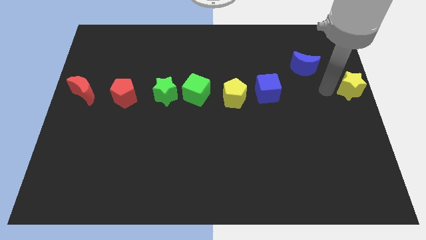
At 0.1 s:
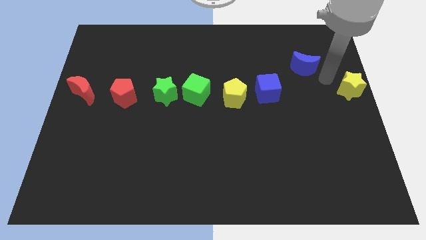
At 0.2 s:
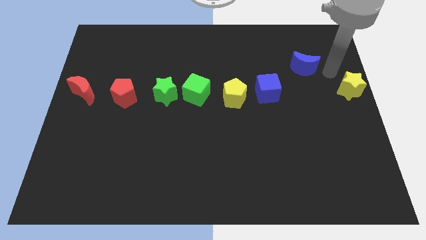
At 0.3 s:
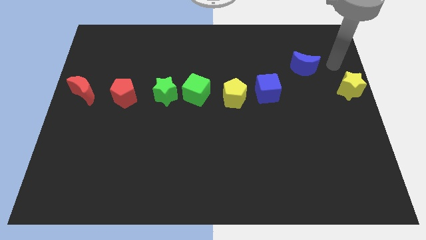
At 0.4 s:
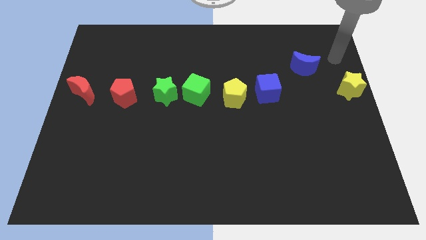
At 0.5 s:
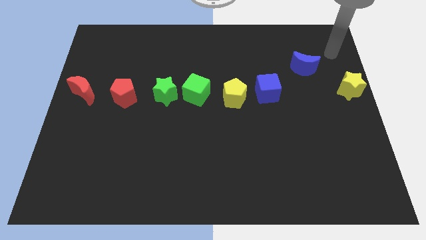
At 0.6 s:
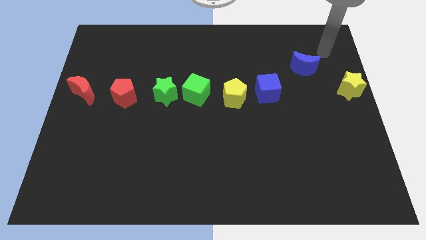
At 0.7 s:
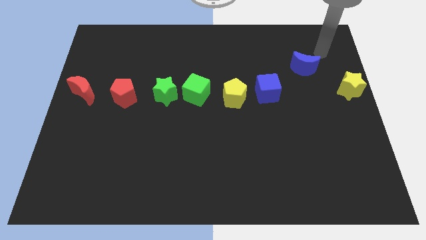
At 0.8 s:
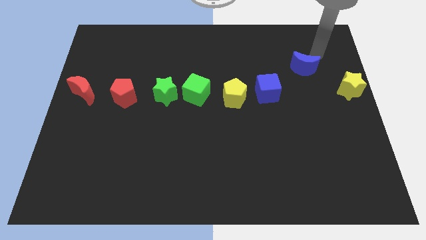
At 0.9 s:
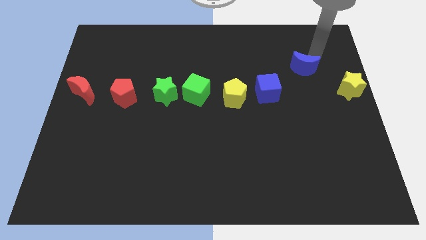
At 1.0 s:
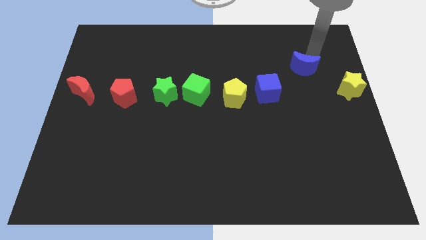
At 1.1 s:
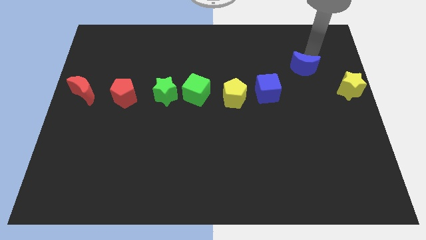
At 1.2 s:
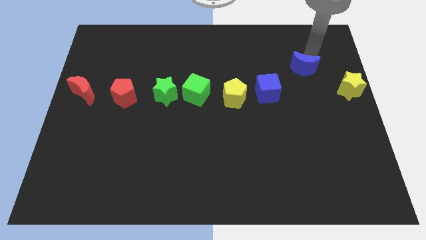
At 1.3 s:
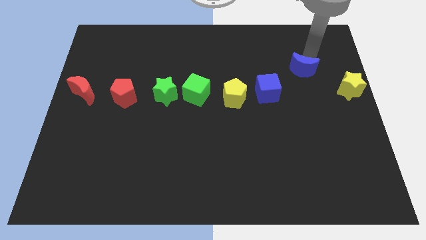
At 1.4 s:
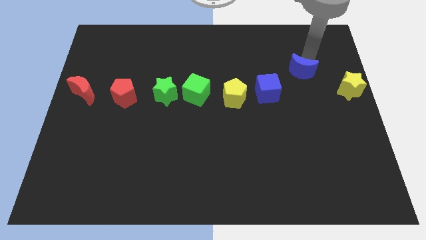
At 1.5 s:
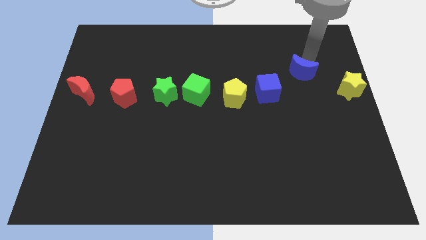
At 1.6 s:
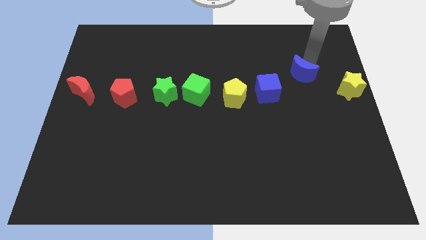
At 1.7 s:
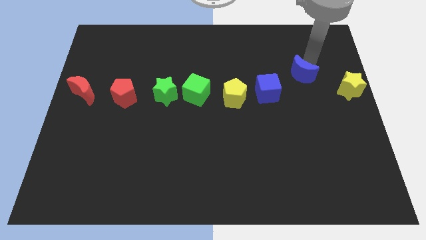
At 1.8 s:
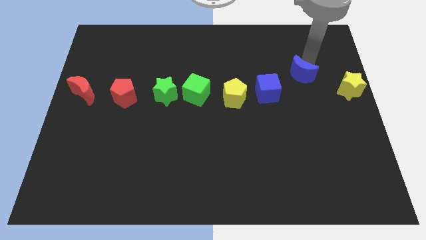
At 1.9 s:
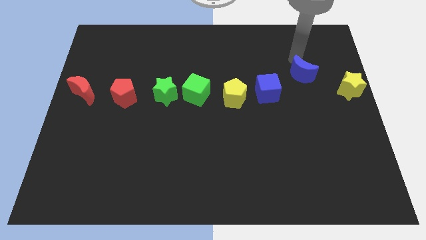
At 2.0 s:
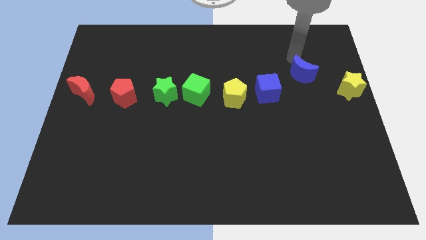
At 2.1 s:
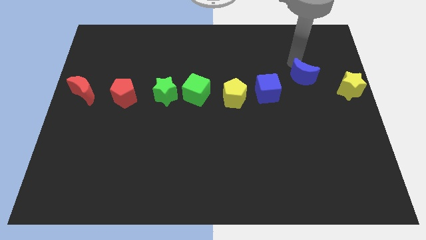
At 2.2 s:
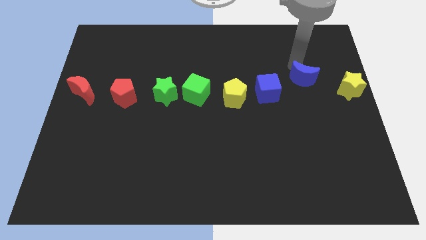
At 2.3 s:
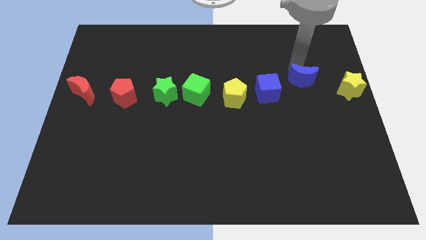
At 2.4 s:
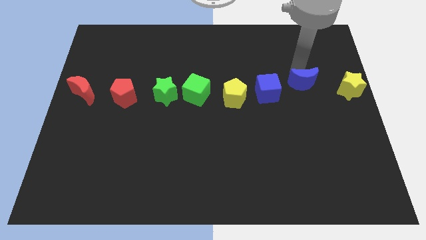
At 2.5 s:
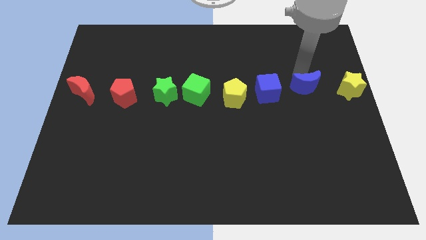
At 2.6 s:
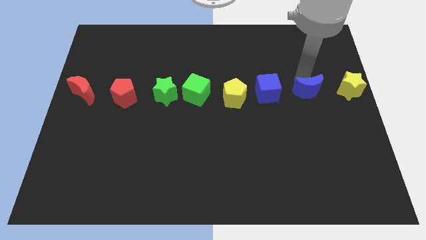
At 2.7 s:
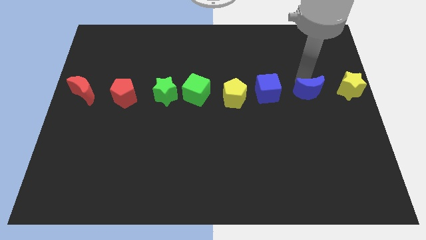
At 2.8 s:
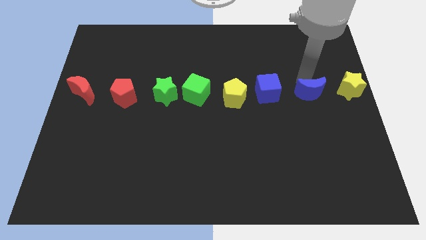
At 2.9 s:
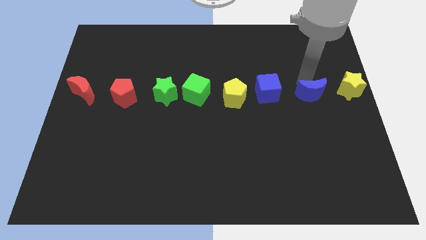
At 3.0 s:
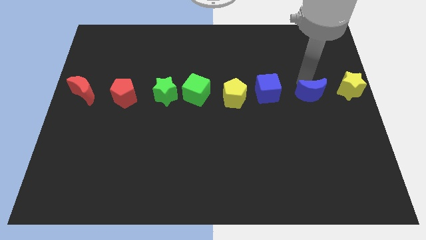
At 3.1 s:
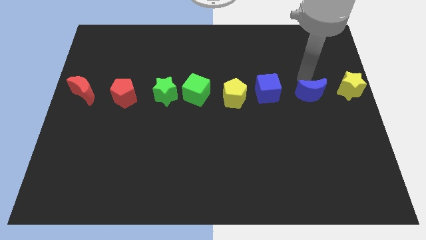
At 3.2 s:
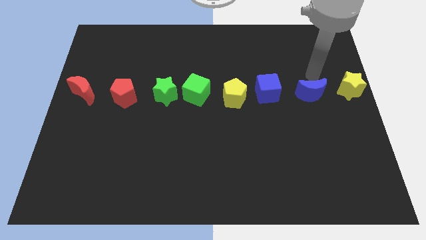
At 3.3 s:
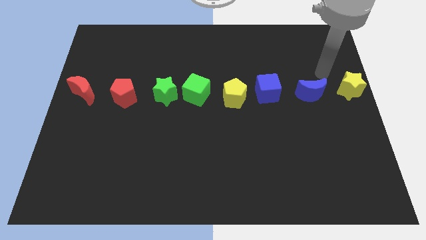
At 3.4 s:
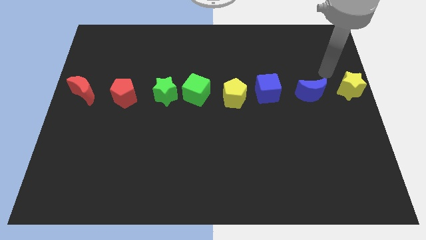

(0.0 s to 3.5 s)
put the blue crescent in between the blue cube and the yellow star

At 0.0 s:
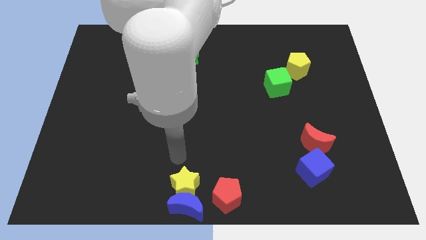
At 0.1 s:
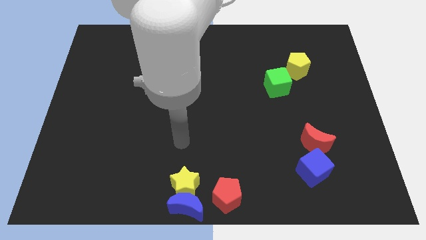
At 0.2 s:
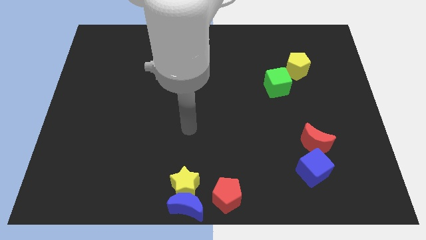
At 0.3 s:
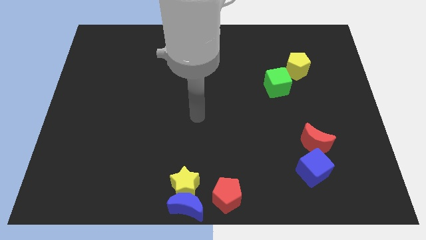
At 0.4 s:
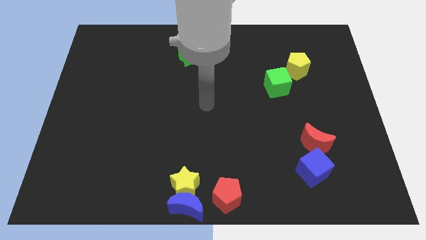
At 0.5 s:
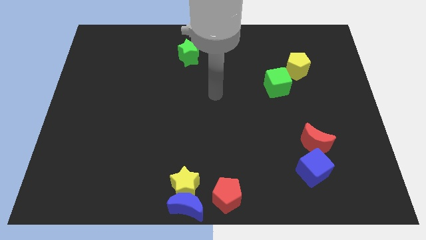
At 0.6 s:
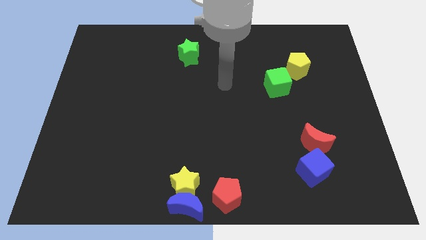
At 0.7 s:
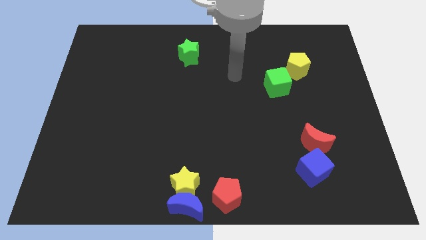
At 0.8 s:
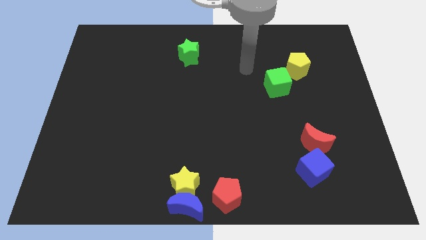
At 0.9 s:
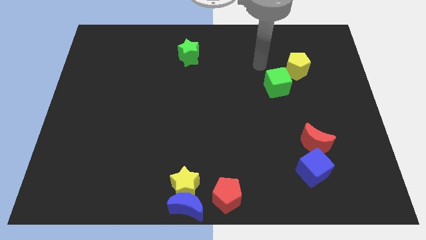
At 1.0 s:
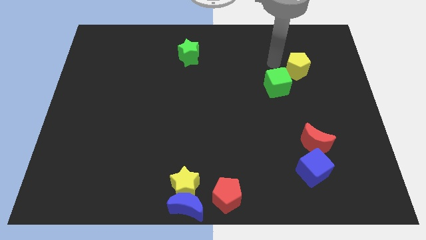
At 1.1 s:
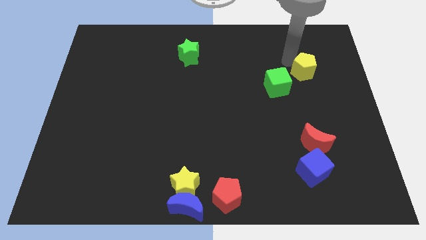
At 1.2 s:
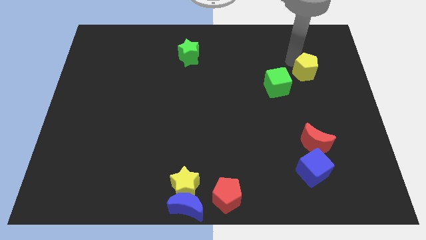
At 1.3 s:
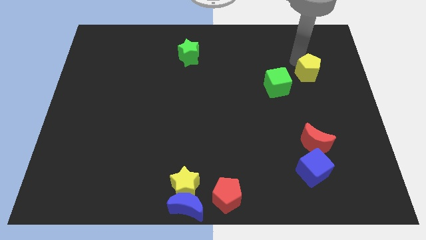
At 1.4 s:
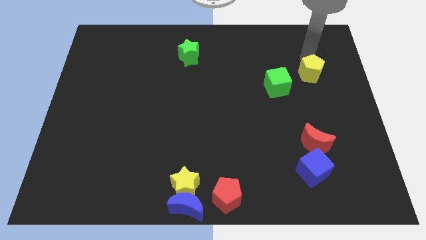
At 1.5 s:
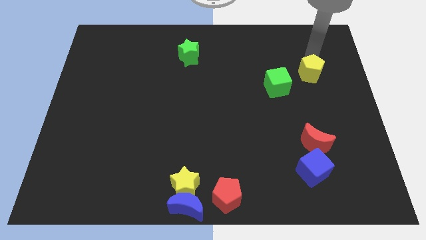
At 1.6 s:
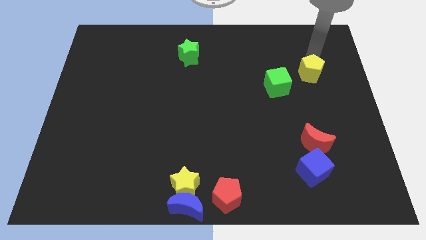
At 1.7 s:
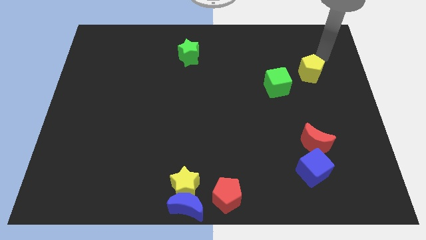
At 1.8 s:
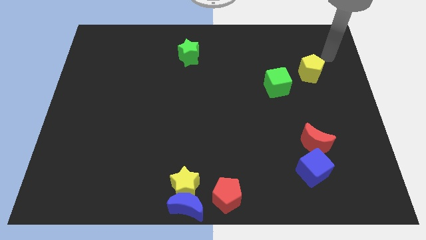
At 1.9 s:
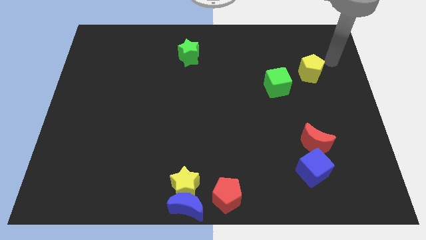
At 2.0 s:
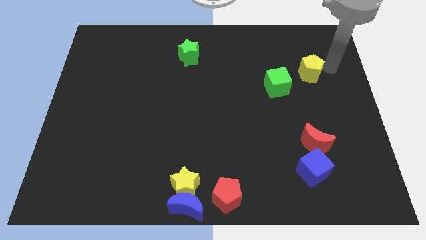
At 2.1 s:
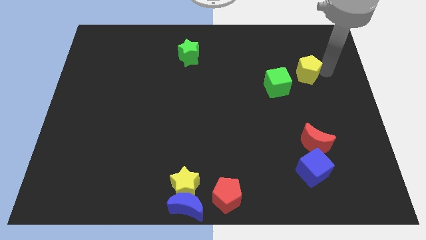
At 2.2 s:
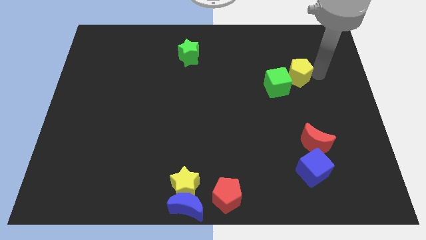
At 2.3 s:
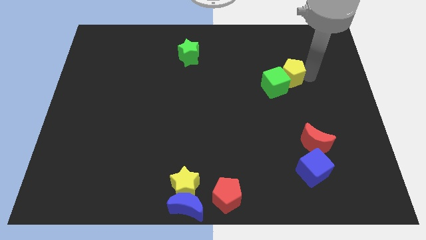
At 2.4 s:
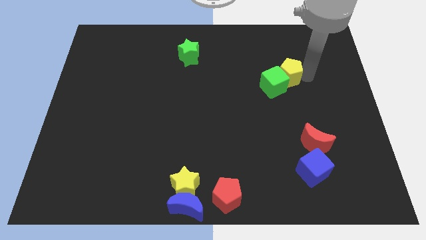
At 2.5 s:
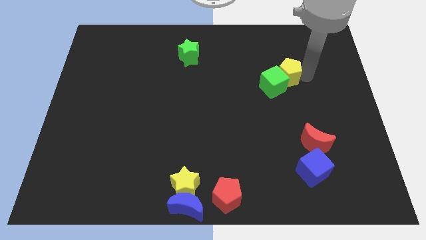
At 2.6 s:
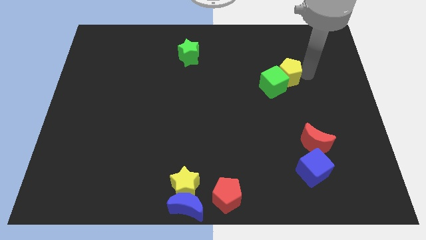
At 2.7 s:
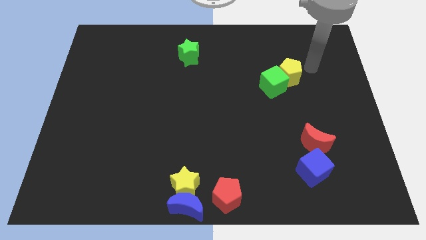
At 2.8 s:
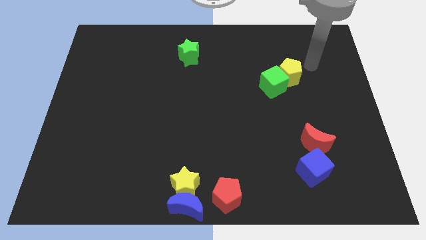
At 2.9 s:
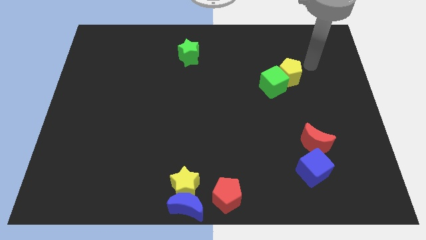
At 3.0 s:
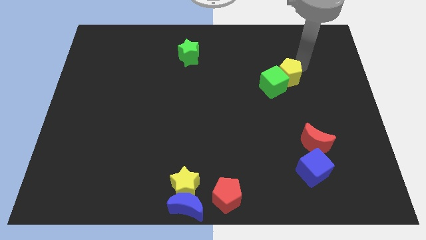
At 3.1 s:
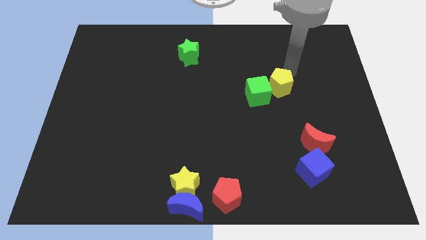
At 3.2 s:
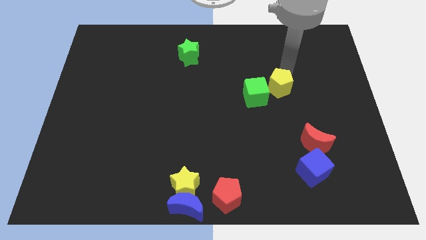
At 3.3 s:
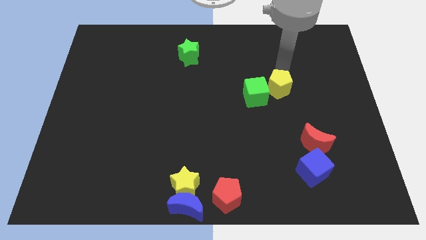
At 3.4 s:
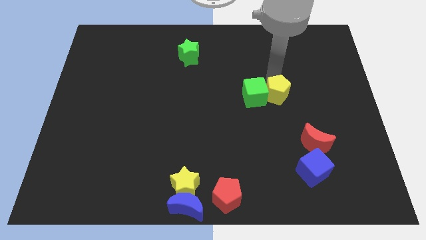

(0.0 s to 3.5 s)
push the yellow pentagon and green cube towards the bottom left of the board

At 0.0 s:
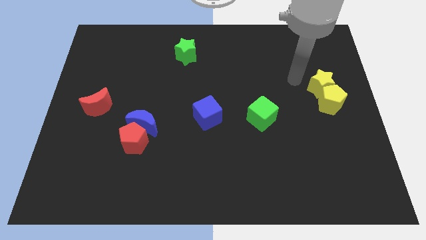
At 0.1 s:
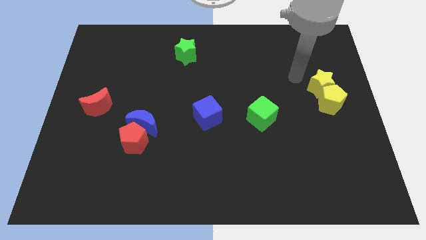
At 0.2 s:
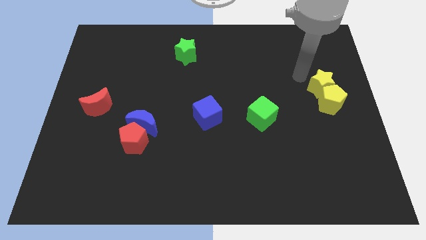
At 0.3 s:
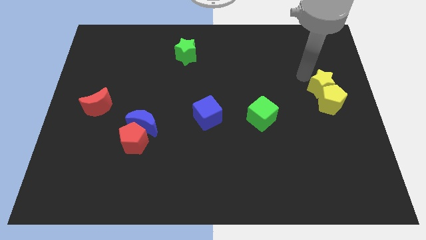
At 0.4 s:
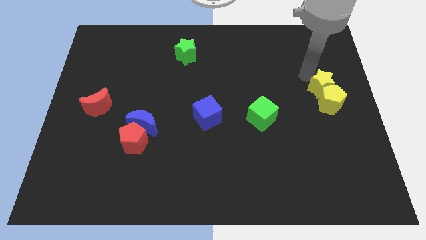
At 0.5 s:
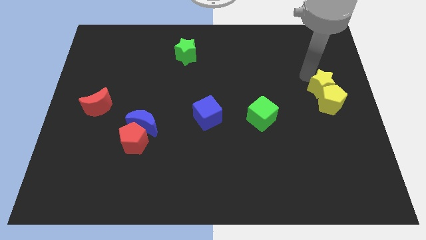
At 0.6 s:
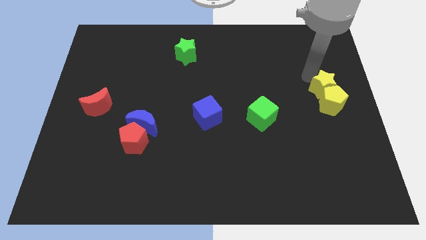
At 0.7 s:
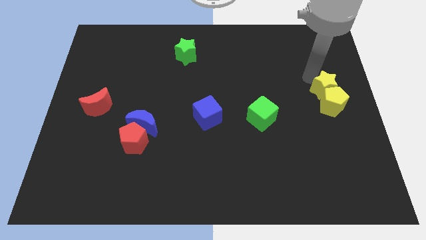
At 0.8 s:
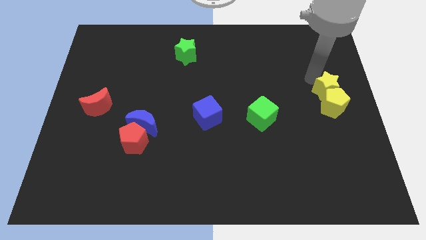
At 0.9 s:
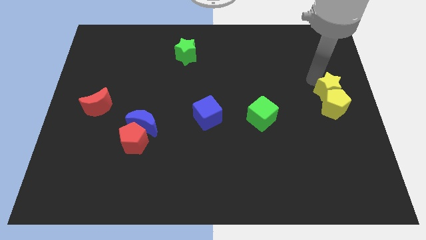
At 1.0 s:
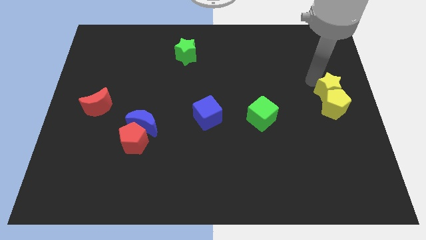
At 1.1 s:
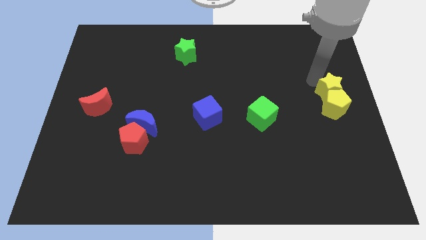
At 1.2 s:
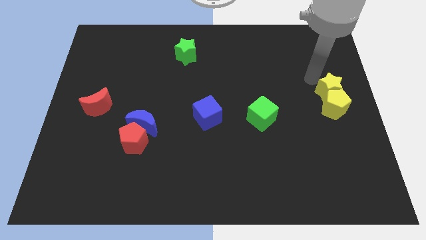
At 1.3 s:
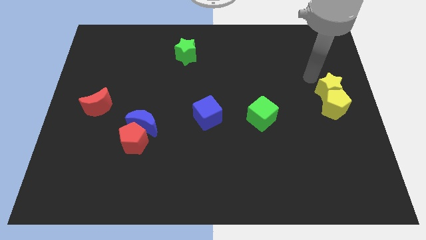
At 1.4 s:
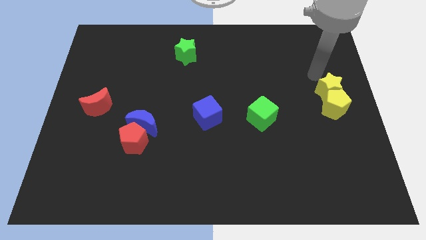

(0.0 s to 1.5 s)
move the yellow blocks downwards slightly

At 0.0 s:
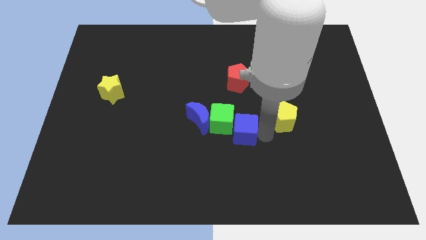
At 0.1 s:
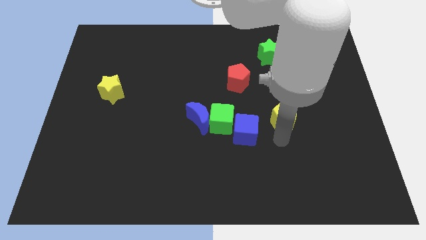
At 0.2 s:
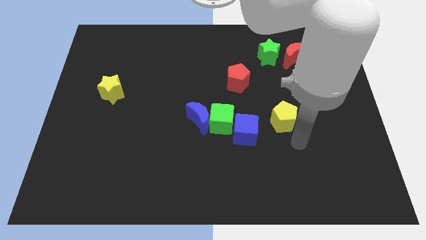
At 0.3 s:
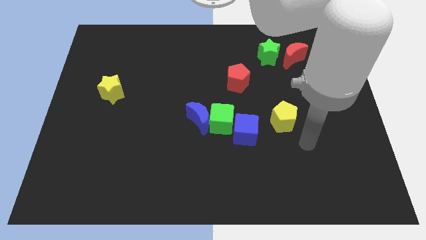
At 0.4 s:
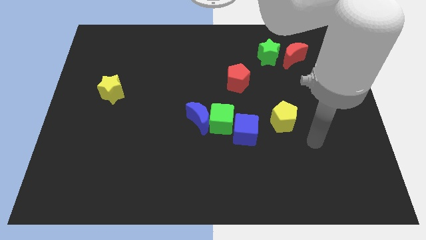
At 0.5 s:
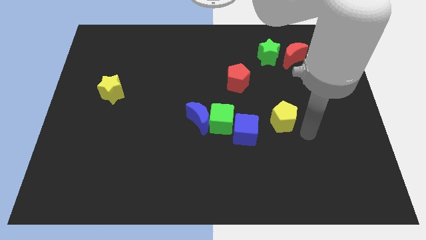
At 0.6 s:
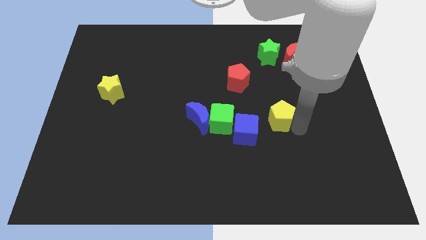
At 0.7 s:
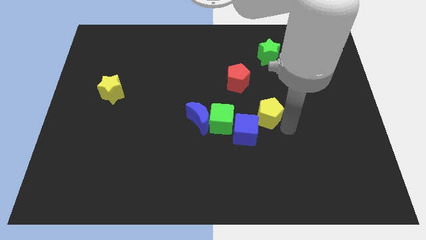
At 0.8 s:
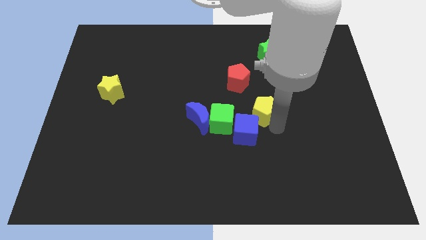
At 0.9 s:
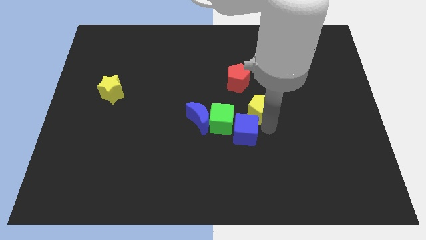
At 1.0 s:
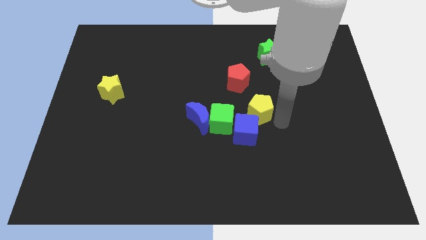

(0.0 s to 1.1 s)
move the yellow pentagon slightly to the left
